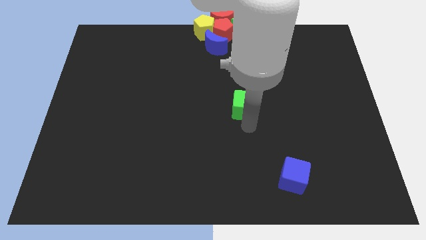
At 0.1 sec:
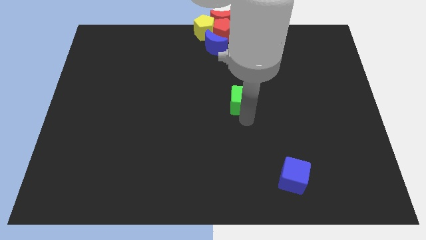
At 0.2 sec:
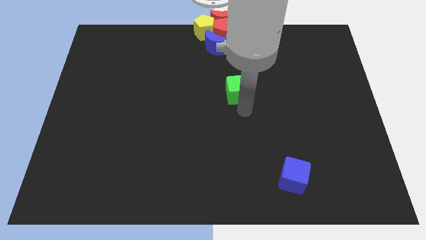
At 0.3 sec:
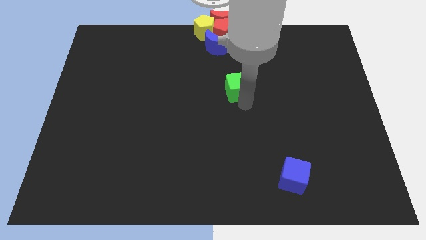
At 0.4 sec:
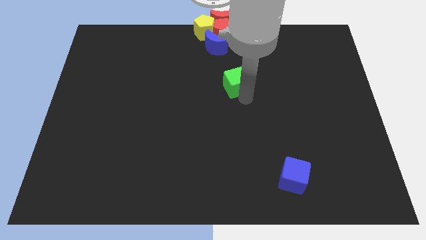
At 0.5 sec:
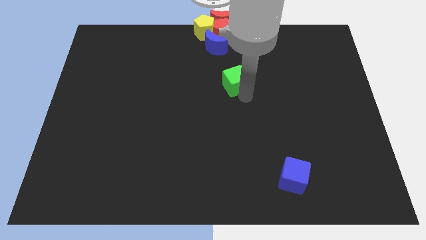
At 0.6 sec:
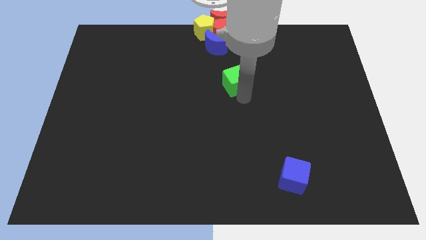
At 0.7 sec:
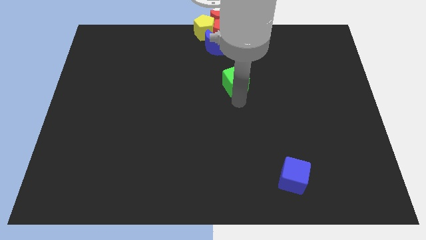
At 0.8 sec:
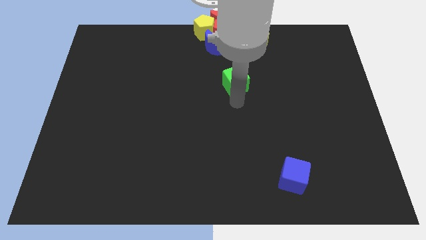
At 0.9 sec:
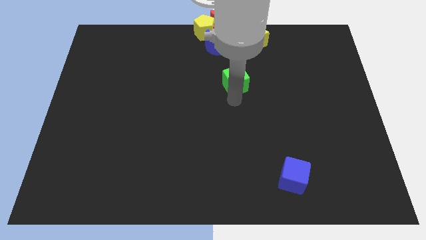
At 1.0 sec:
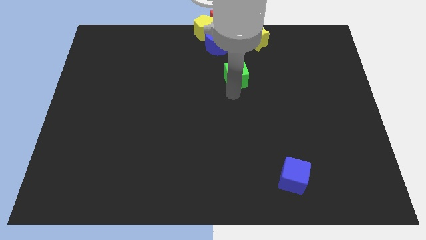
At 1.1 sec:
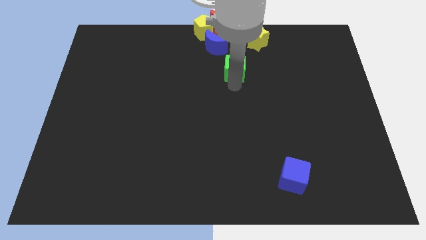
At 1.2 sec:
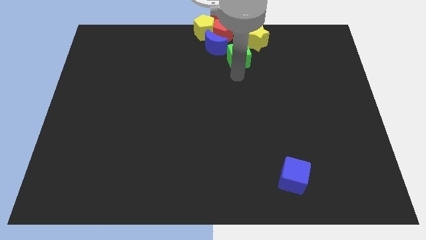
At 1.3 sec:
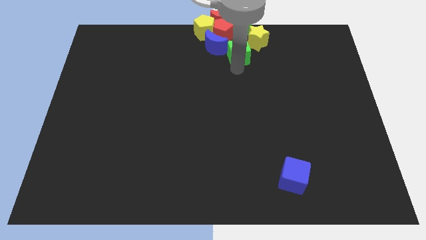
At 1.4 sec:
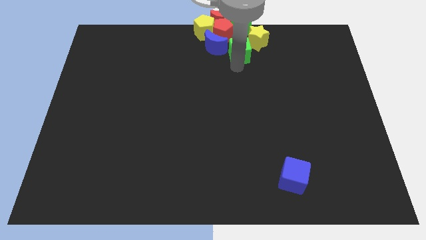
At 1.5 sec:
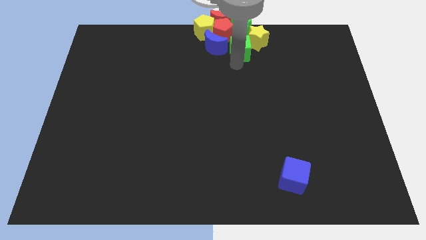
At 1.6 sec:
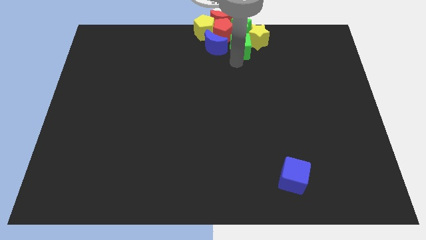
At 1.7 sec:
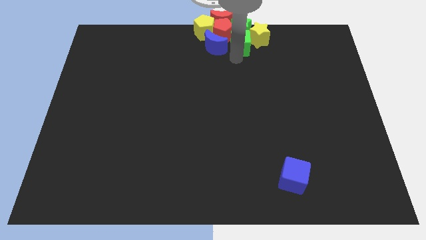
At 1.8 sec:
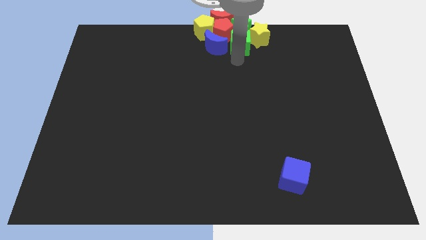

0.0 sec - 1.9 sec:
move the green cube towards the top center of board

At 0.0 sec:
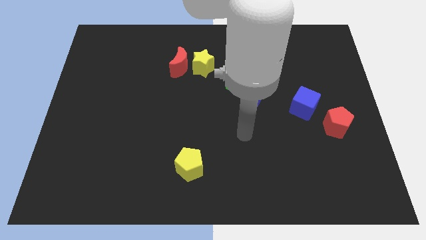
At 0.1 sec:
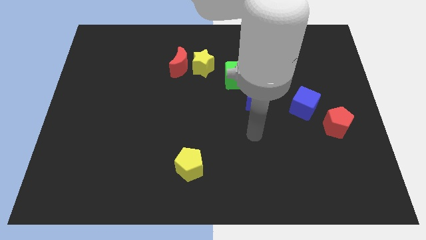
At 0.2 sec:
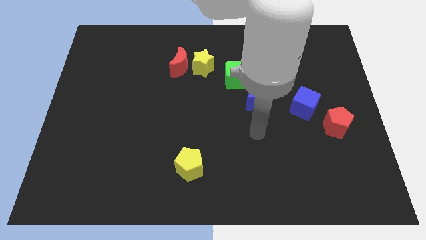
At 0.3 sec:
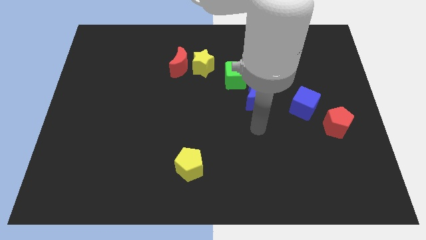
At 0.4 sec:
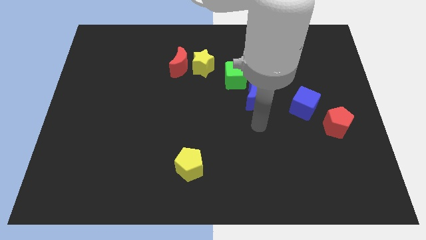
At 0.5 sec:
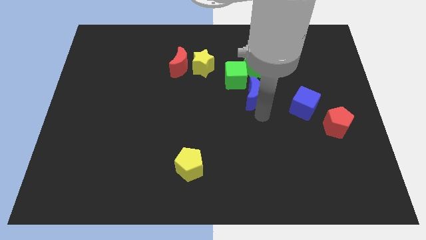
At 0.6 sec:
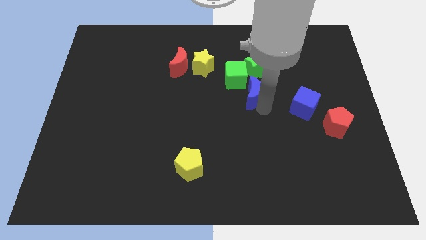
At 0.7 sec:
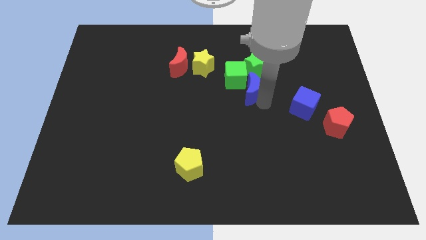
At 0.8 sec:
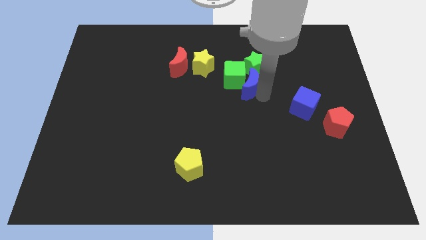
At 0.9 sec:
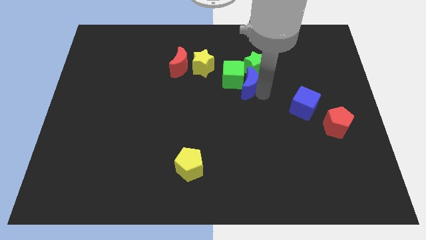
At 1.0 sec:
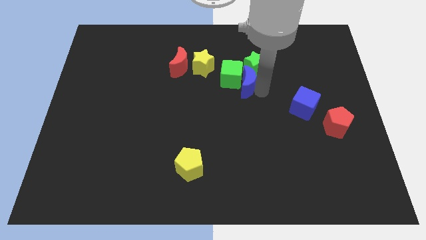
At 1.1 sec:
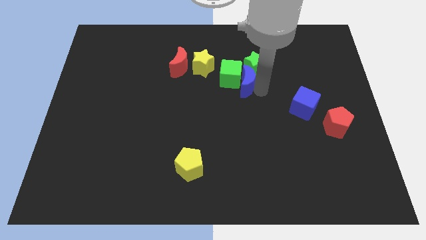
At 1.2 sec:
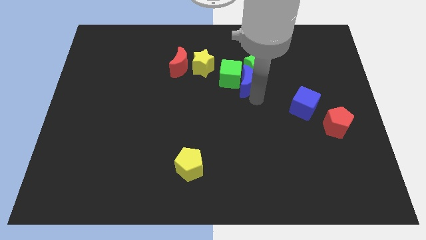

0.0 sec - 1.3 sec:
move the blue moon into the green blocks

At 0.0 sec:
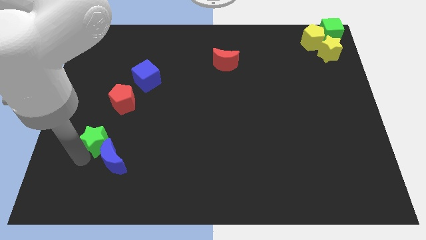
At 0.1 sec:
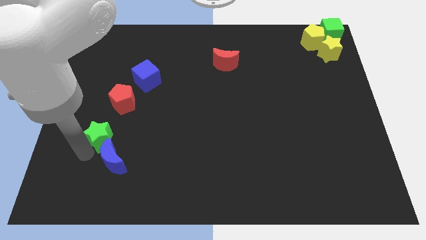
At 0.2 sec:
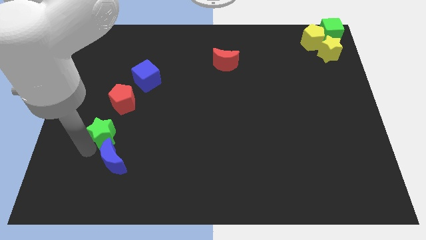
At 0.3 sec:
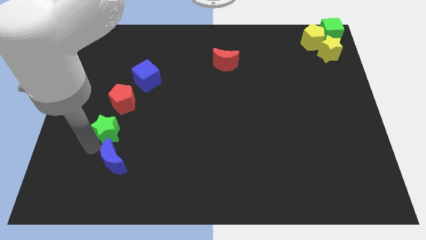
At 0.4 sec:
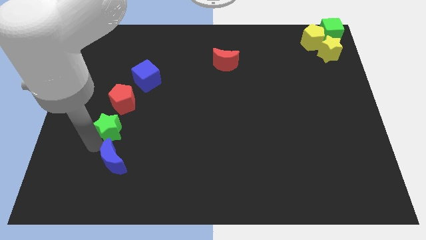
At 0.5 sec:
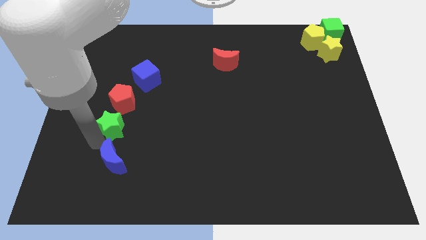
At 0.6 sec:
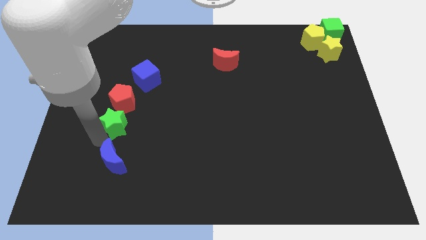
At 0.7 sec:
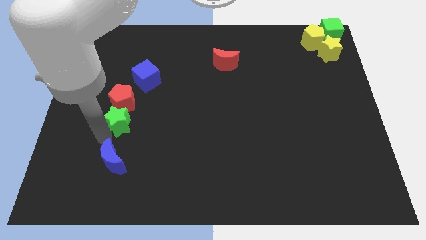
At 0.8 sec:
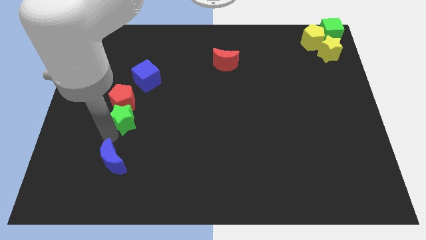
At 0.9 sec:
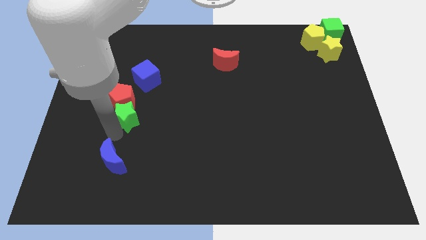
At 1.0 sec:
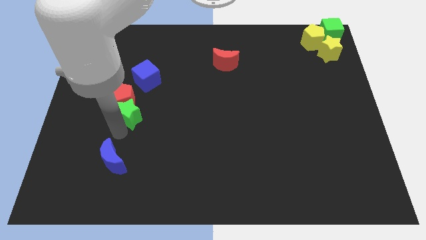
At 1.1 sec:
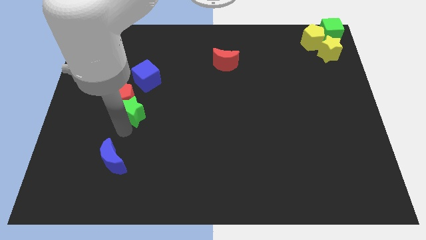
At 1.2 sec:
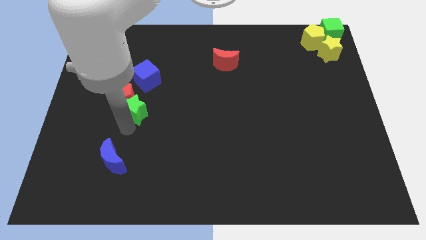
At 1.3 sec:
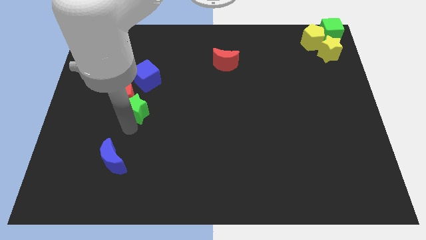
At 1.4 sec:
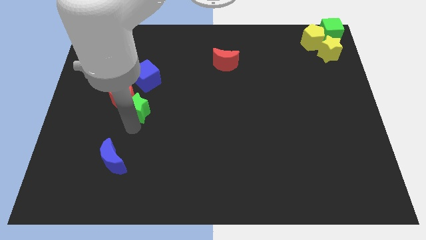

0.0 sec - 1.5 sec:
move the green star to the bottom of the red pentagon

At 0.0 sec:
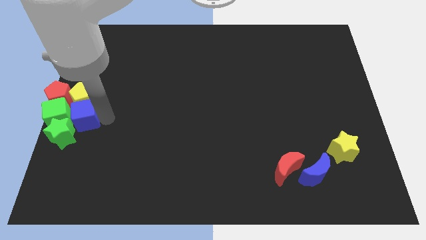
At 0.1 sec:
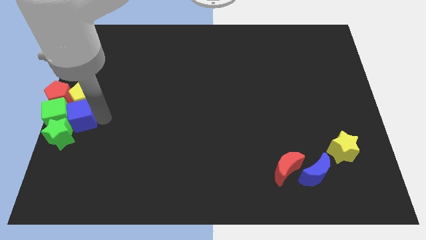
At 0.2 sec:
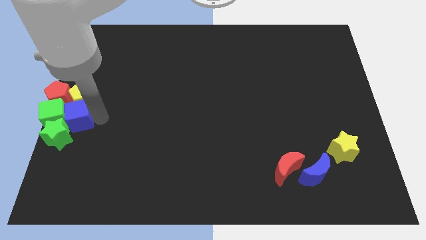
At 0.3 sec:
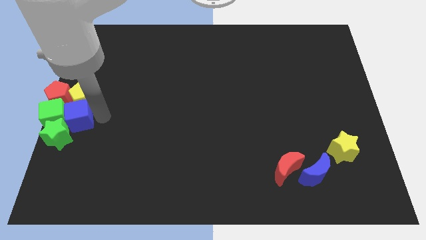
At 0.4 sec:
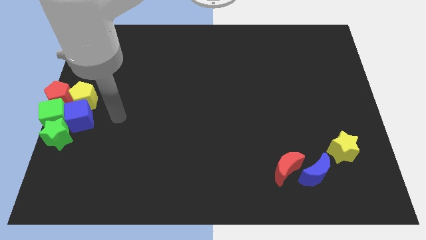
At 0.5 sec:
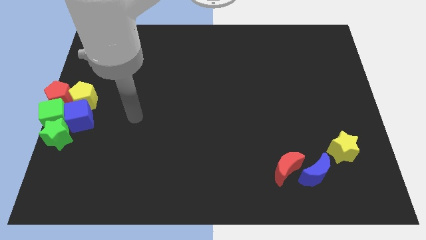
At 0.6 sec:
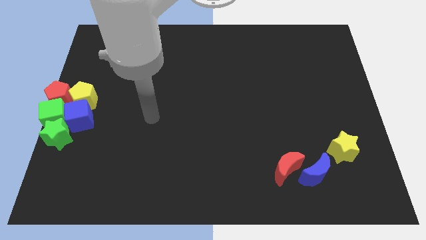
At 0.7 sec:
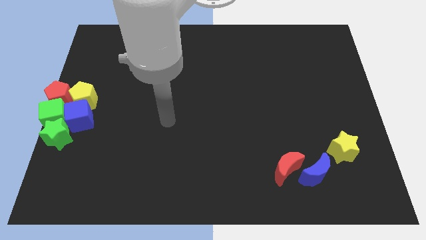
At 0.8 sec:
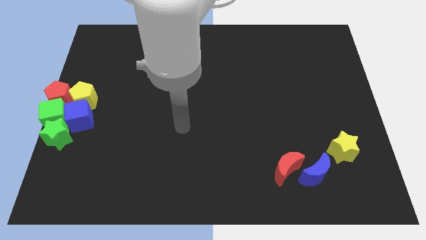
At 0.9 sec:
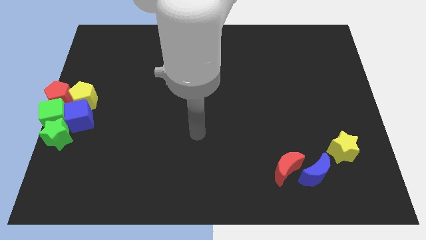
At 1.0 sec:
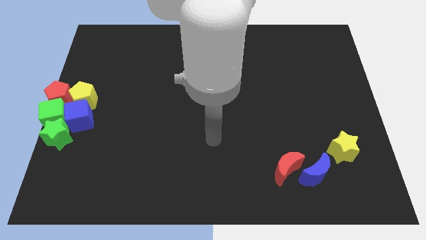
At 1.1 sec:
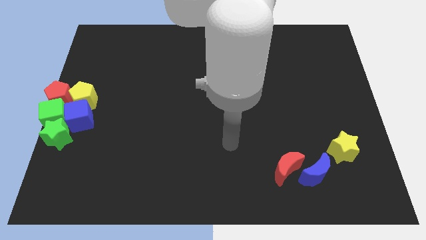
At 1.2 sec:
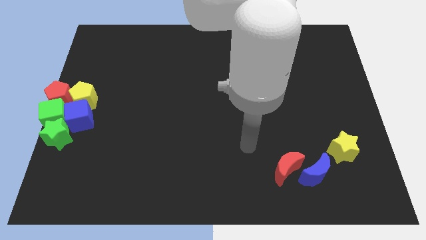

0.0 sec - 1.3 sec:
move the arm away from the blue cube

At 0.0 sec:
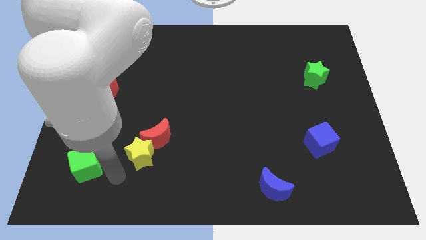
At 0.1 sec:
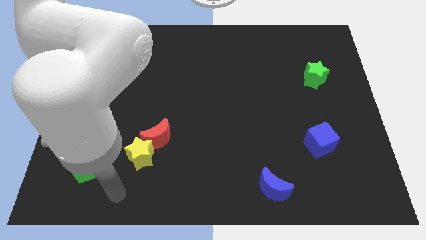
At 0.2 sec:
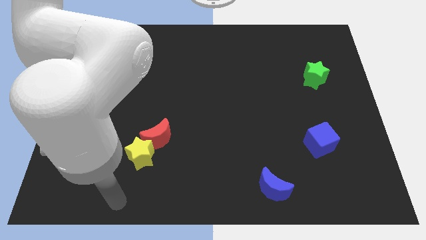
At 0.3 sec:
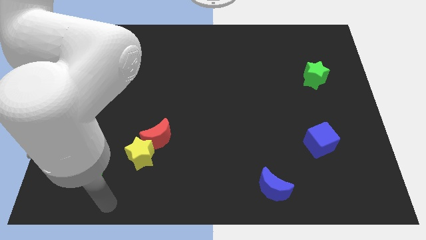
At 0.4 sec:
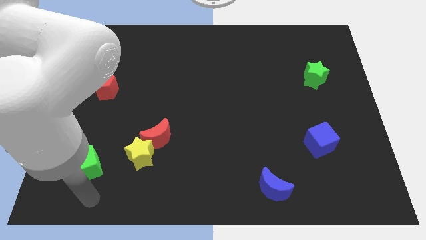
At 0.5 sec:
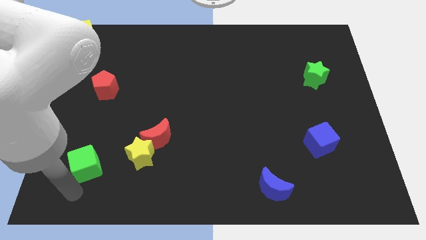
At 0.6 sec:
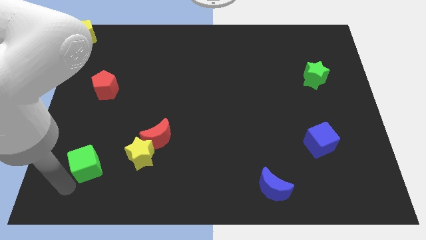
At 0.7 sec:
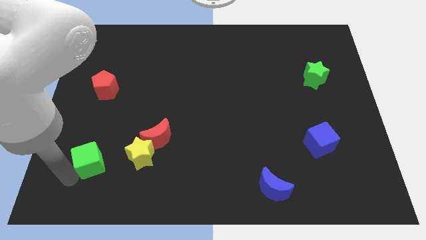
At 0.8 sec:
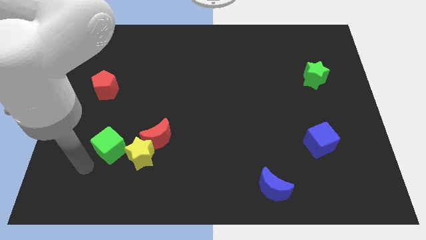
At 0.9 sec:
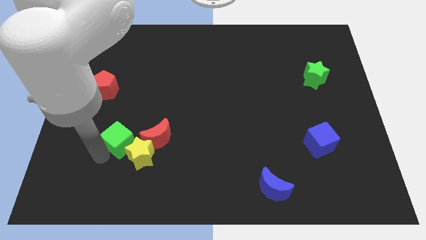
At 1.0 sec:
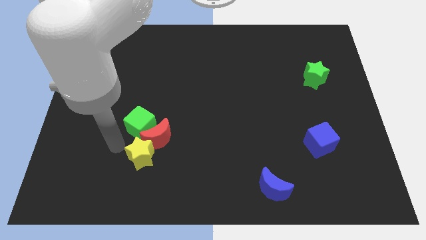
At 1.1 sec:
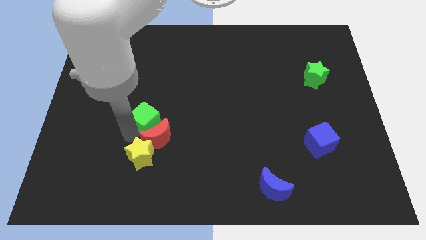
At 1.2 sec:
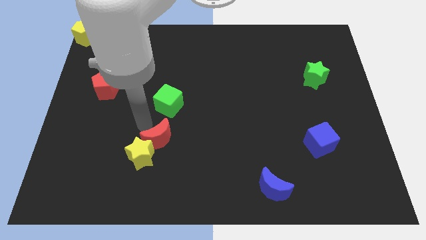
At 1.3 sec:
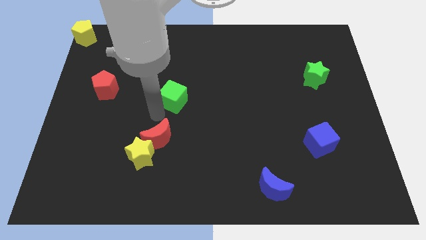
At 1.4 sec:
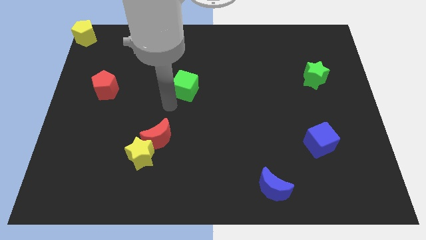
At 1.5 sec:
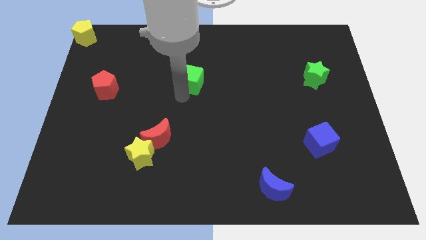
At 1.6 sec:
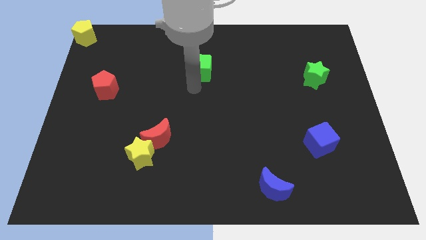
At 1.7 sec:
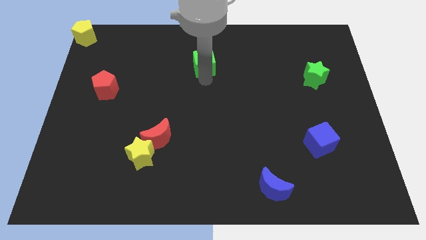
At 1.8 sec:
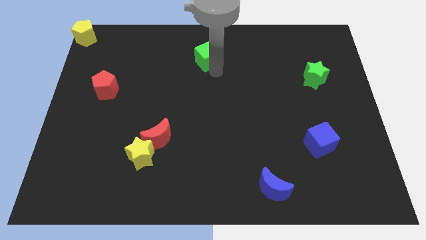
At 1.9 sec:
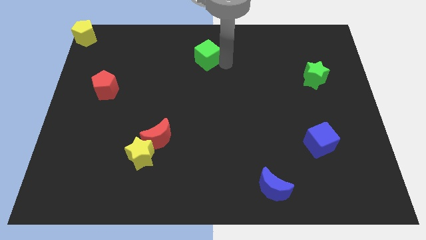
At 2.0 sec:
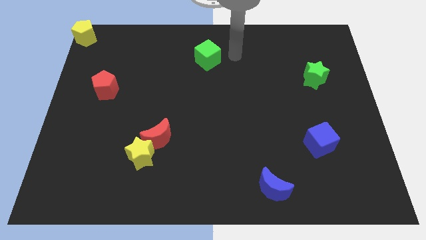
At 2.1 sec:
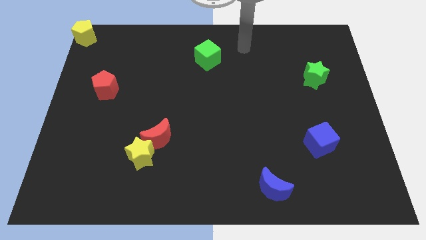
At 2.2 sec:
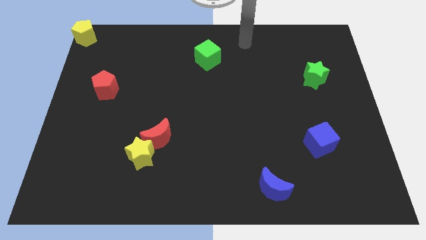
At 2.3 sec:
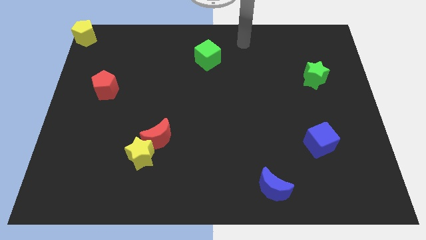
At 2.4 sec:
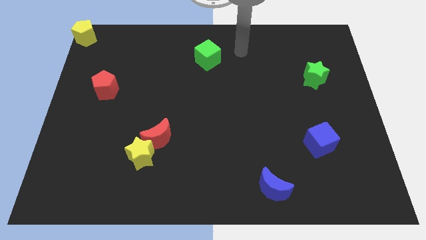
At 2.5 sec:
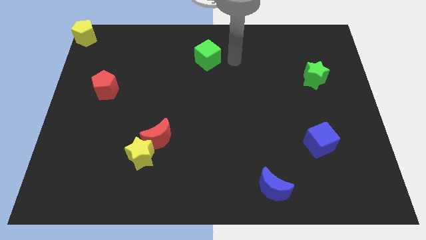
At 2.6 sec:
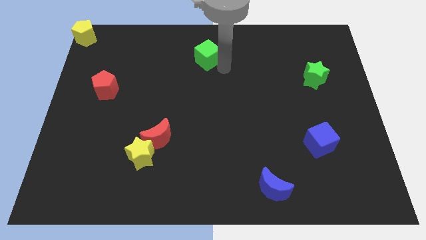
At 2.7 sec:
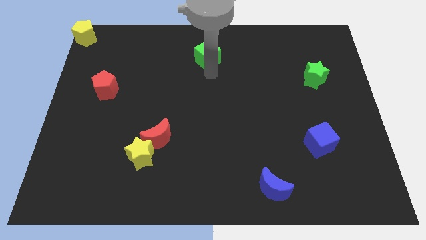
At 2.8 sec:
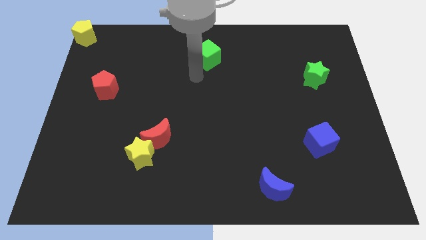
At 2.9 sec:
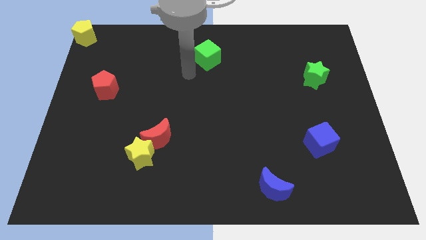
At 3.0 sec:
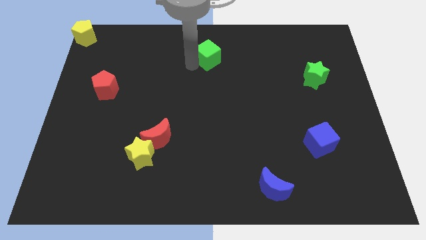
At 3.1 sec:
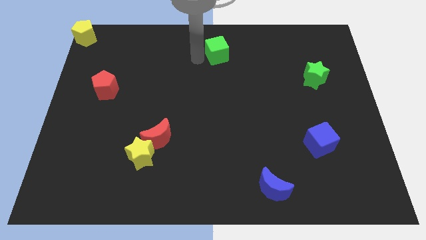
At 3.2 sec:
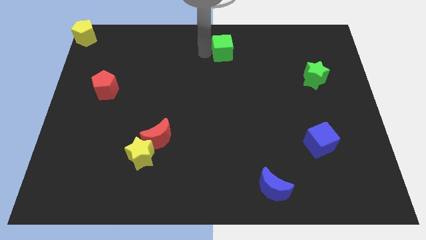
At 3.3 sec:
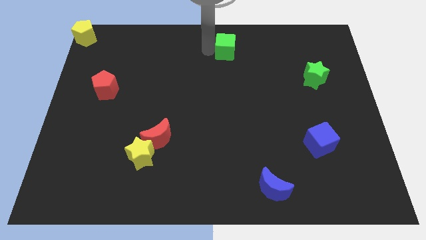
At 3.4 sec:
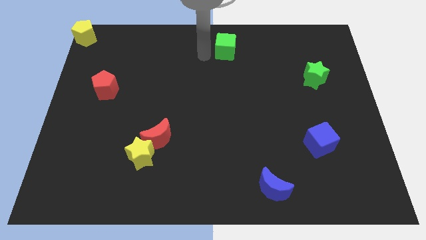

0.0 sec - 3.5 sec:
place the green cube at the top center
